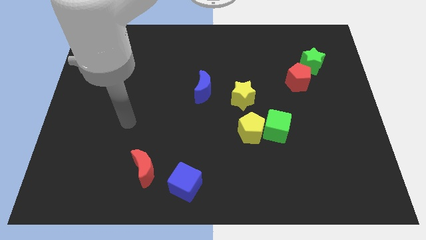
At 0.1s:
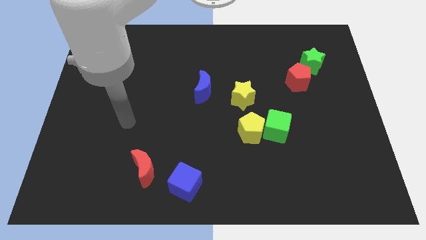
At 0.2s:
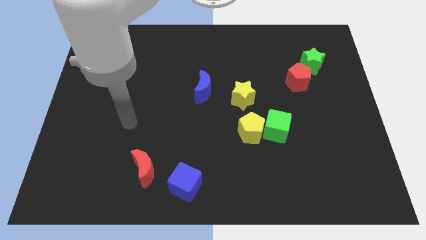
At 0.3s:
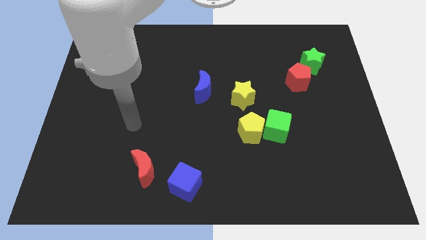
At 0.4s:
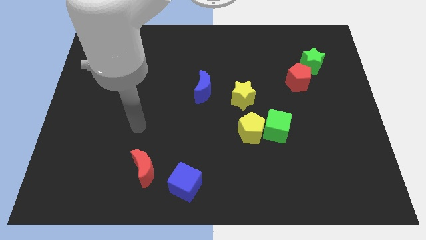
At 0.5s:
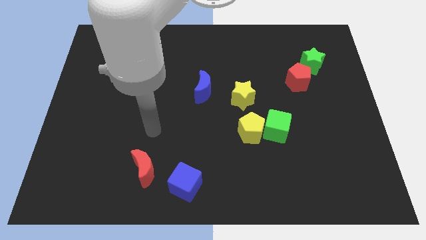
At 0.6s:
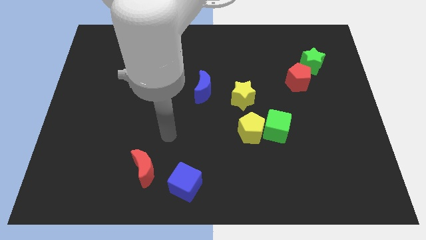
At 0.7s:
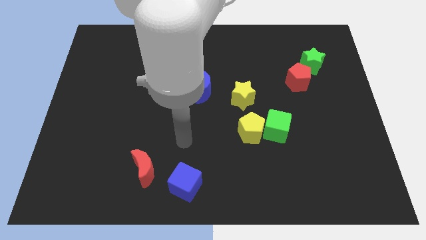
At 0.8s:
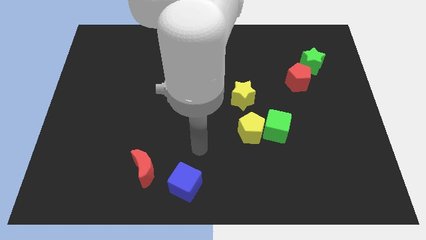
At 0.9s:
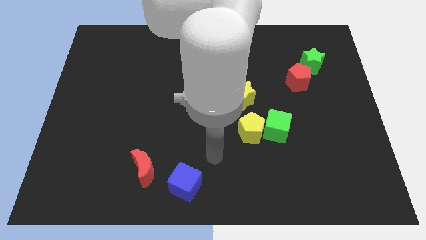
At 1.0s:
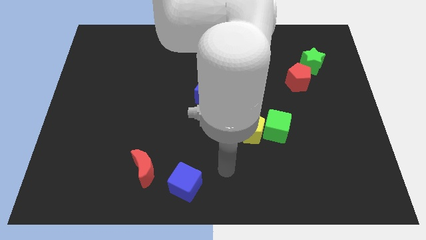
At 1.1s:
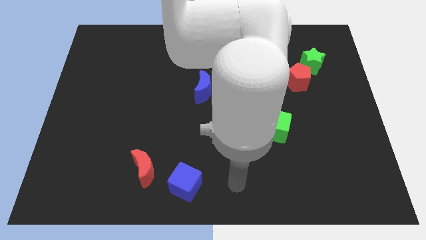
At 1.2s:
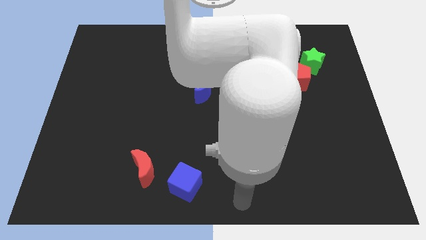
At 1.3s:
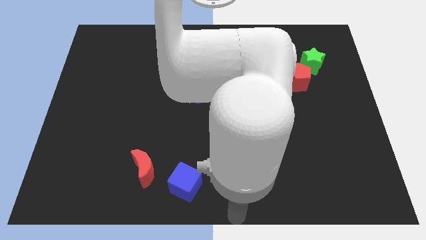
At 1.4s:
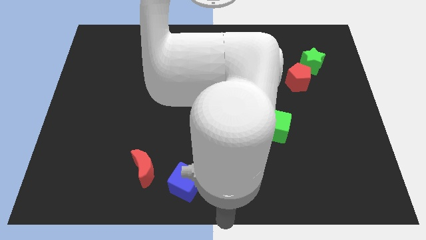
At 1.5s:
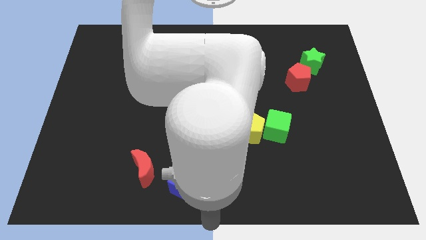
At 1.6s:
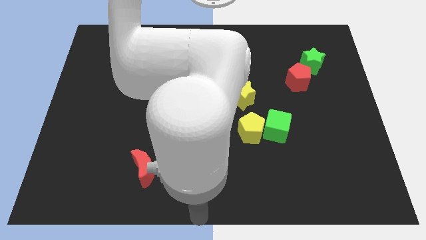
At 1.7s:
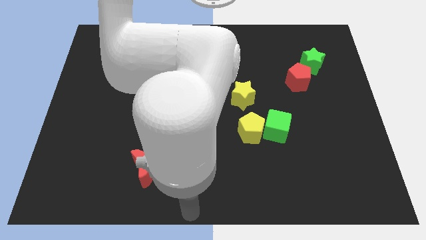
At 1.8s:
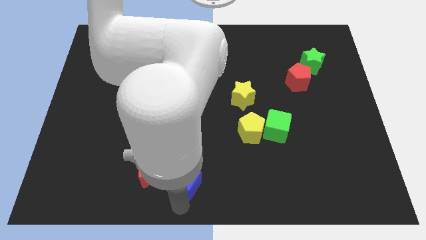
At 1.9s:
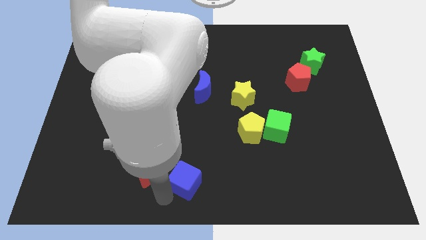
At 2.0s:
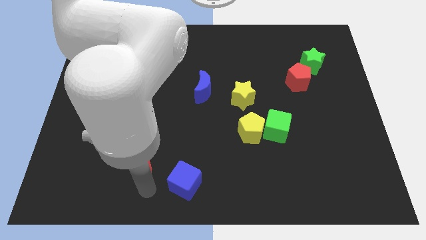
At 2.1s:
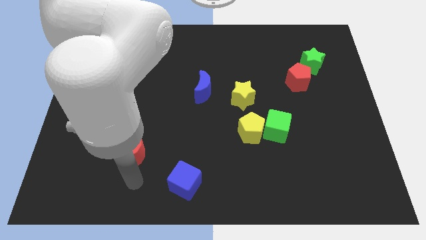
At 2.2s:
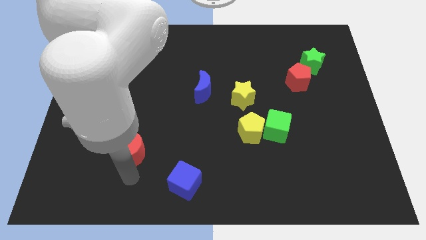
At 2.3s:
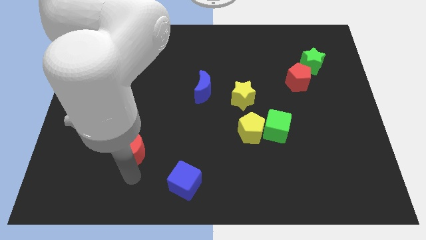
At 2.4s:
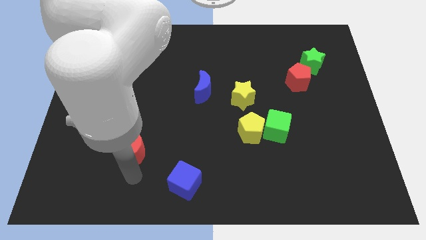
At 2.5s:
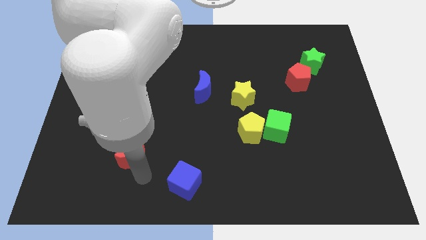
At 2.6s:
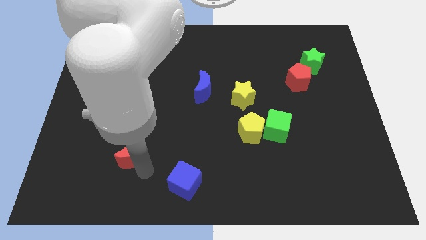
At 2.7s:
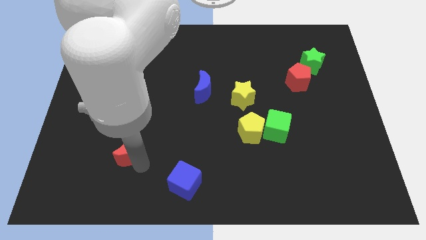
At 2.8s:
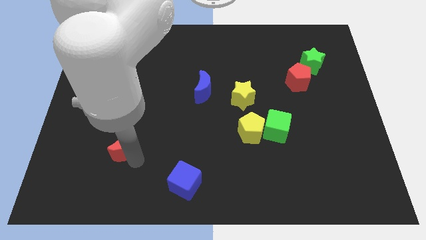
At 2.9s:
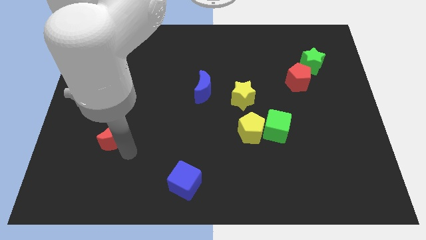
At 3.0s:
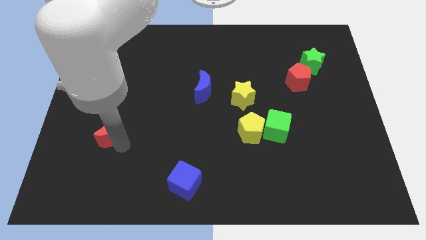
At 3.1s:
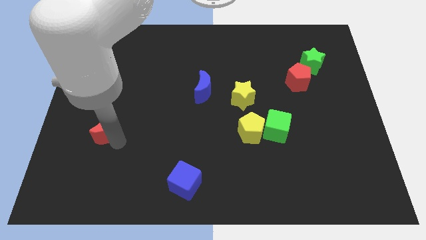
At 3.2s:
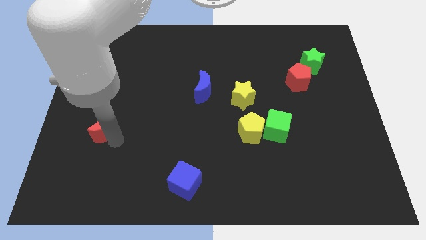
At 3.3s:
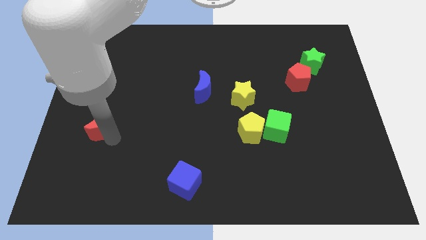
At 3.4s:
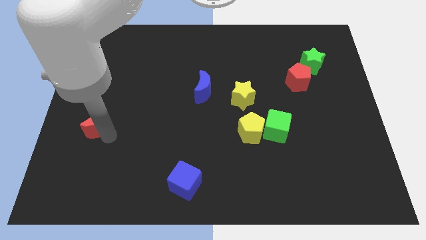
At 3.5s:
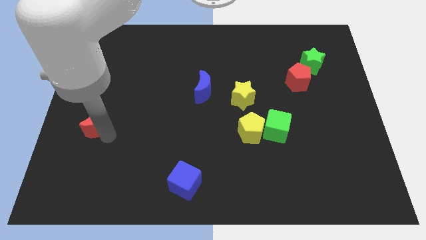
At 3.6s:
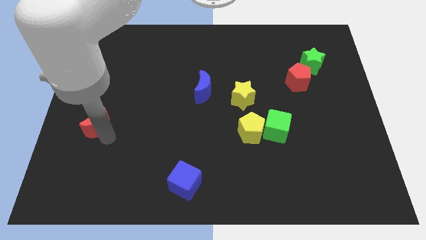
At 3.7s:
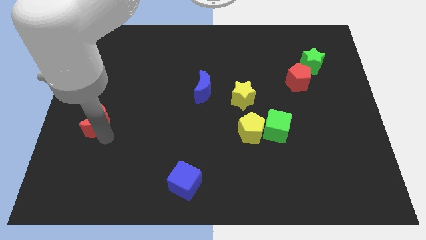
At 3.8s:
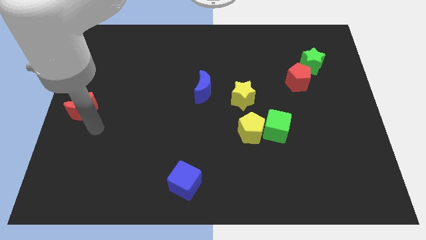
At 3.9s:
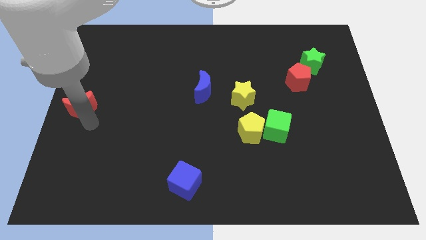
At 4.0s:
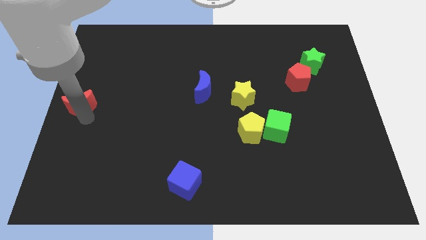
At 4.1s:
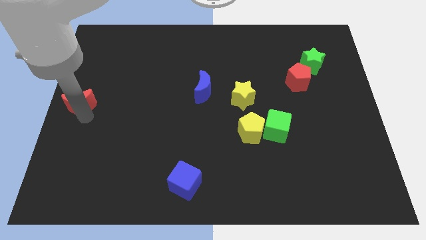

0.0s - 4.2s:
put the red moon at the center left

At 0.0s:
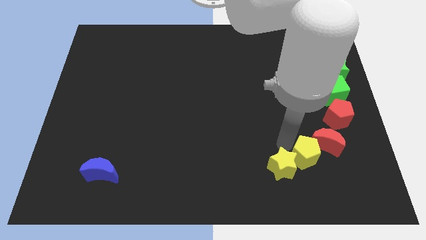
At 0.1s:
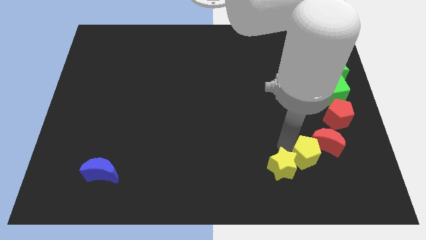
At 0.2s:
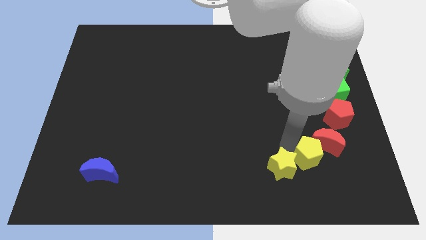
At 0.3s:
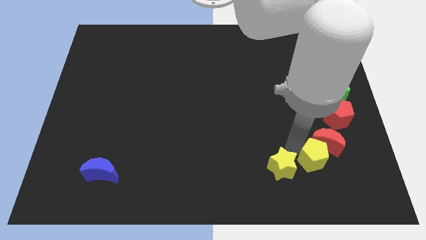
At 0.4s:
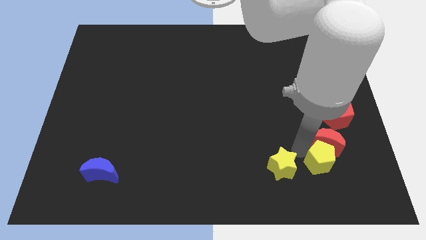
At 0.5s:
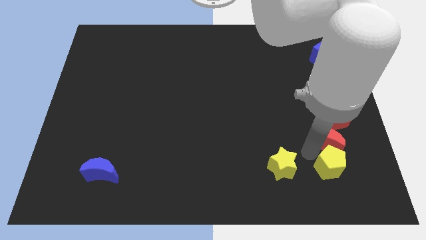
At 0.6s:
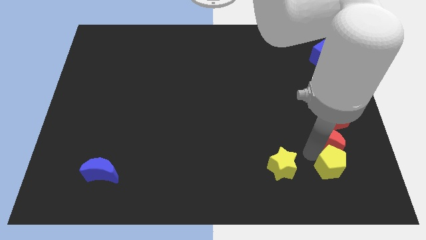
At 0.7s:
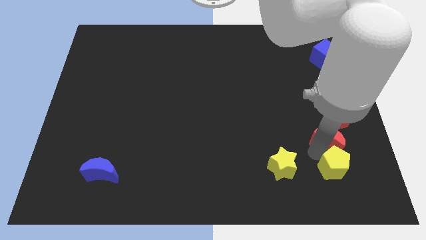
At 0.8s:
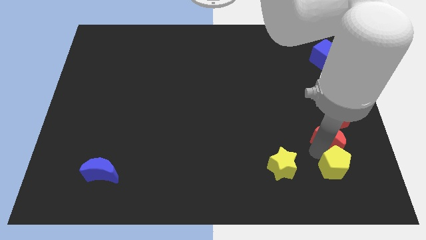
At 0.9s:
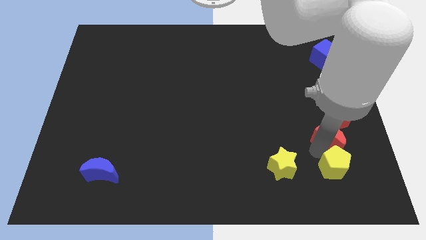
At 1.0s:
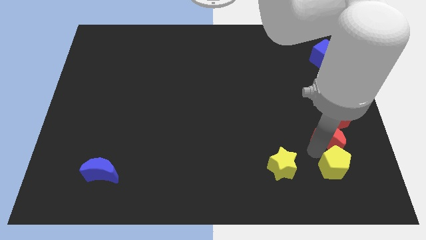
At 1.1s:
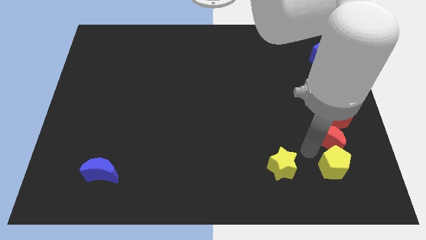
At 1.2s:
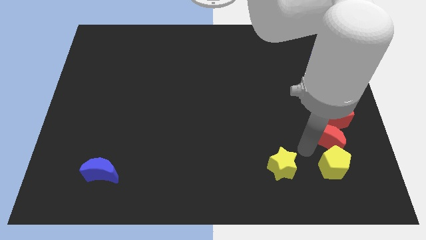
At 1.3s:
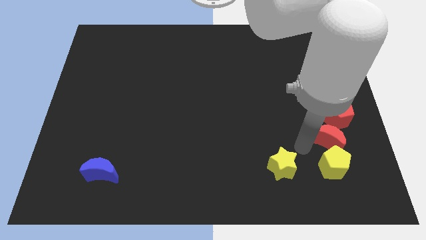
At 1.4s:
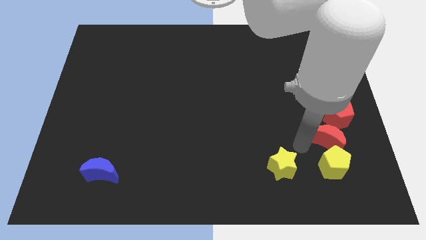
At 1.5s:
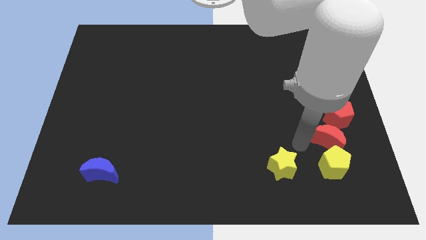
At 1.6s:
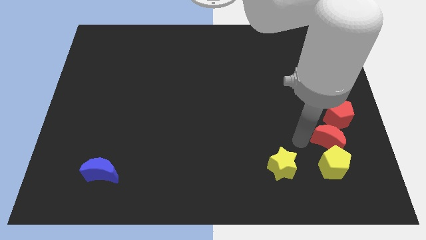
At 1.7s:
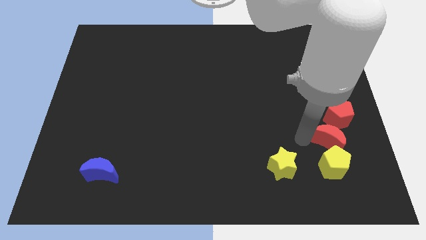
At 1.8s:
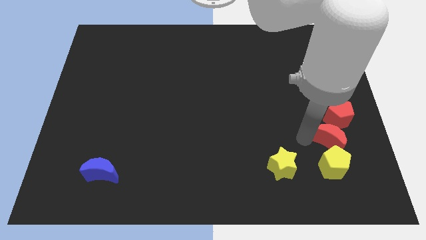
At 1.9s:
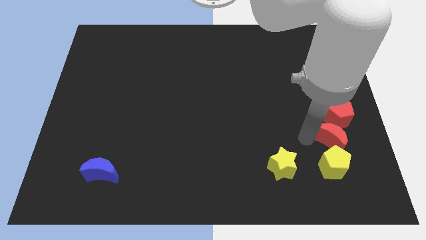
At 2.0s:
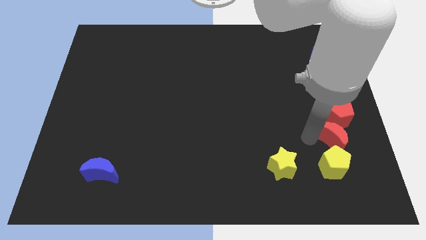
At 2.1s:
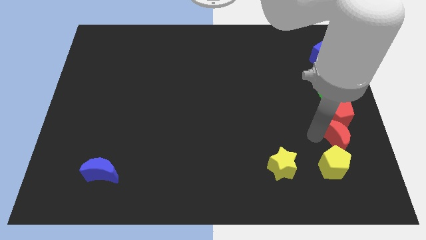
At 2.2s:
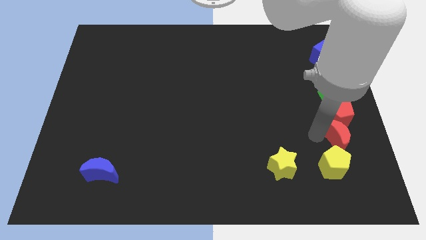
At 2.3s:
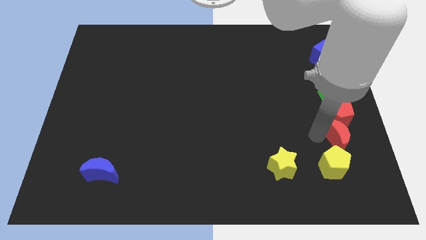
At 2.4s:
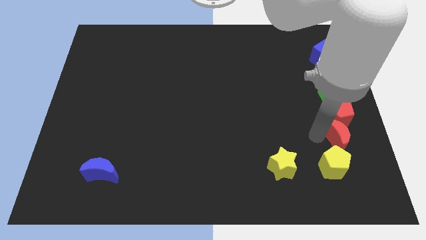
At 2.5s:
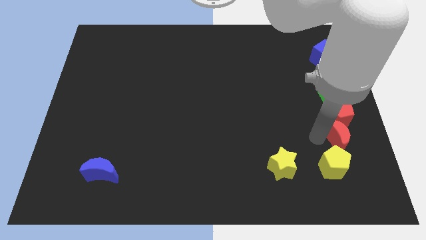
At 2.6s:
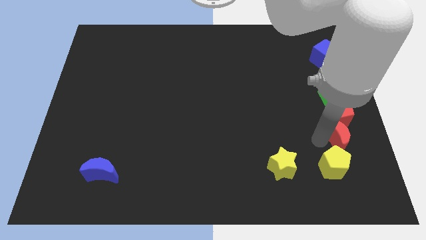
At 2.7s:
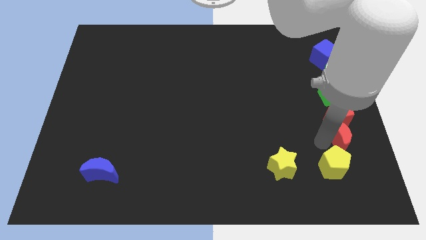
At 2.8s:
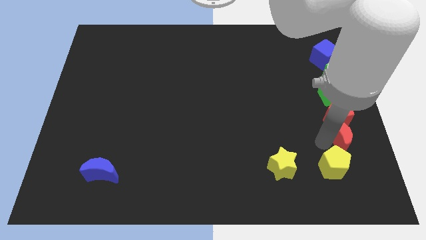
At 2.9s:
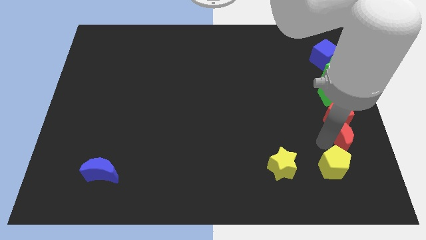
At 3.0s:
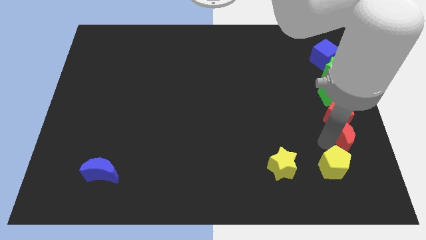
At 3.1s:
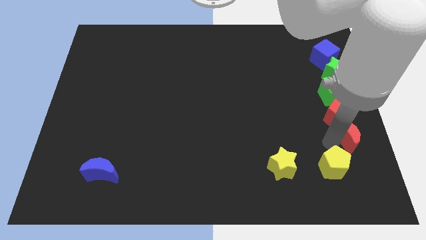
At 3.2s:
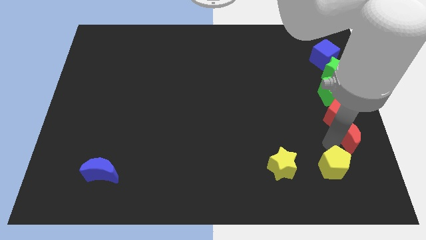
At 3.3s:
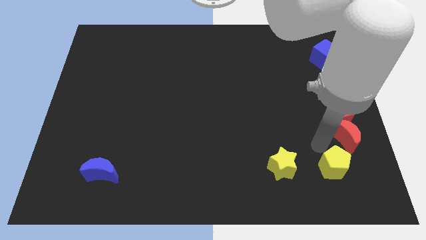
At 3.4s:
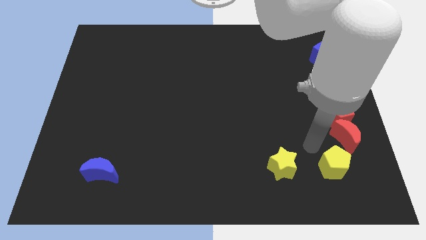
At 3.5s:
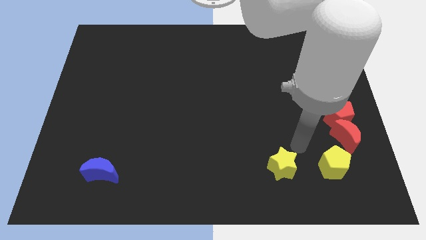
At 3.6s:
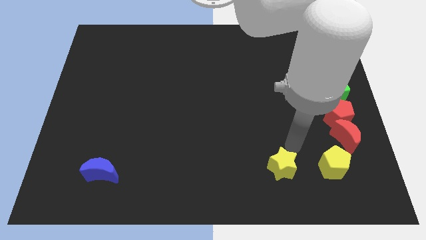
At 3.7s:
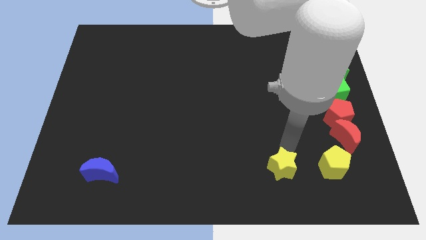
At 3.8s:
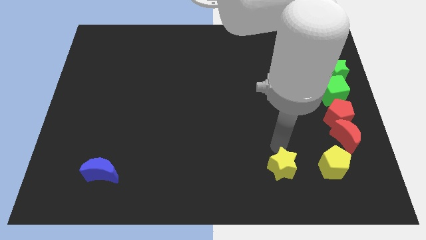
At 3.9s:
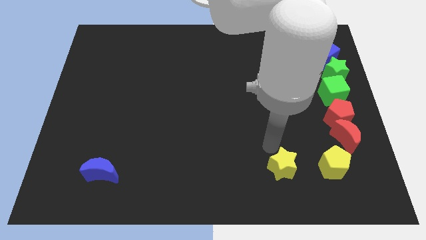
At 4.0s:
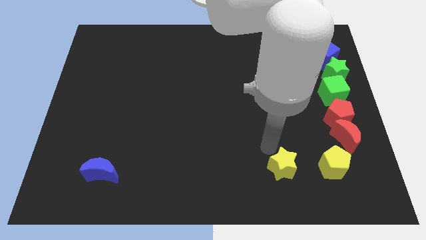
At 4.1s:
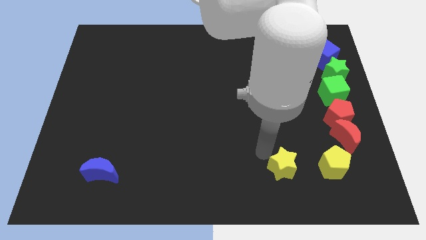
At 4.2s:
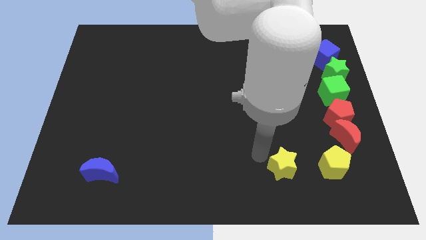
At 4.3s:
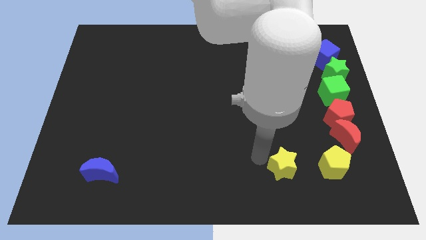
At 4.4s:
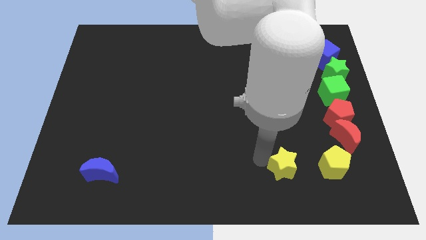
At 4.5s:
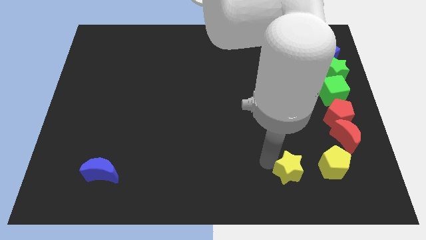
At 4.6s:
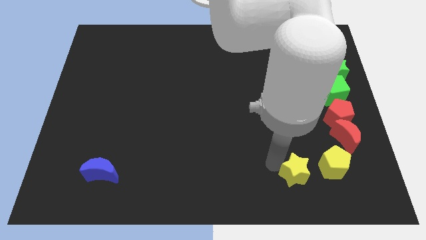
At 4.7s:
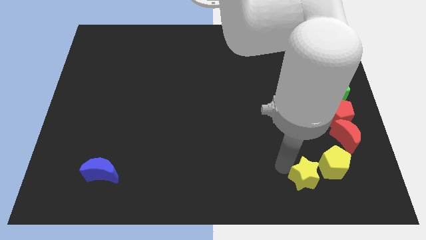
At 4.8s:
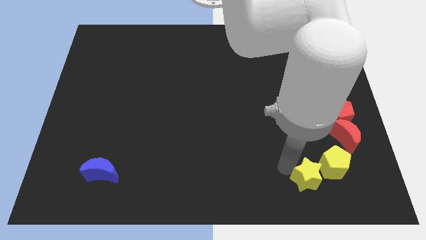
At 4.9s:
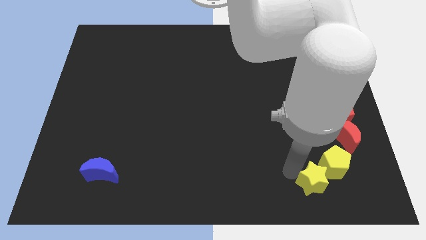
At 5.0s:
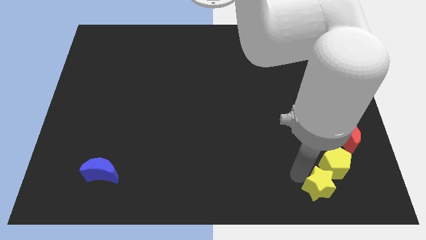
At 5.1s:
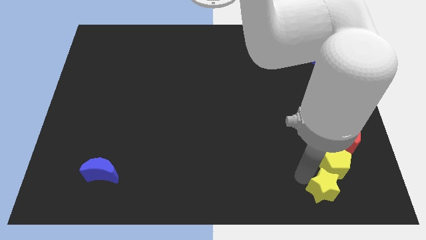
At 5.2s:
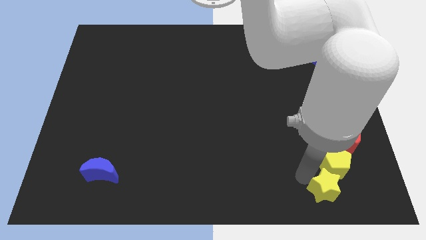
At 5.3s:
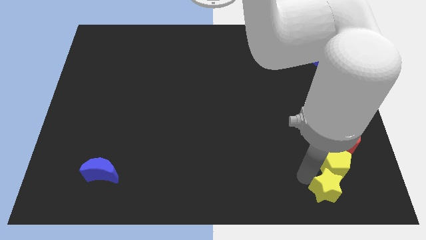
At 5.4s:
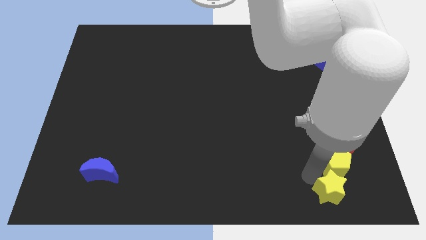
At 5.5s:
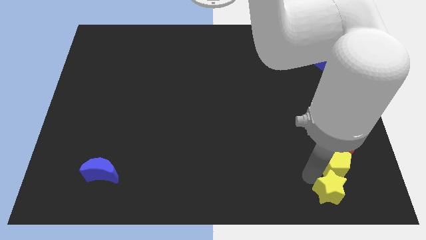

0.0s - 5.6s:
move the yellow star below to the yellow pentagon
